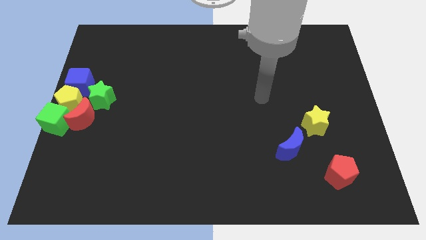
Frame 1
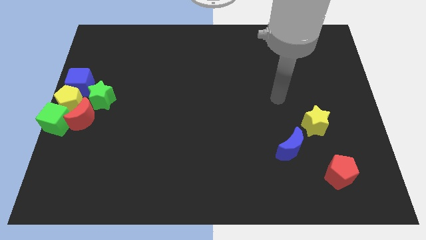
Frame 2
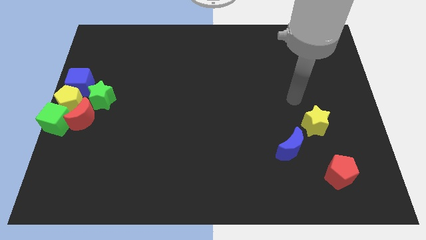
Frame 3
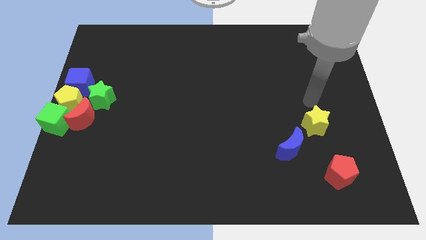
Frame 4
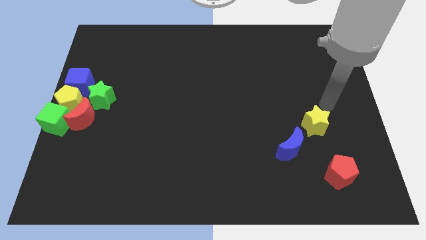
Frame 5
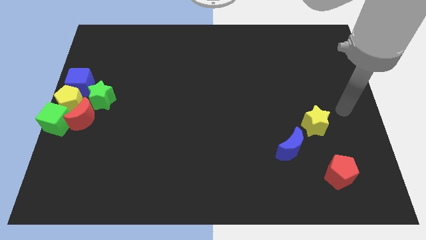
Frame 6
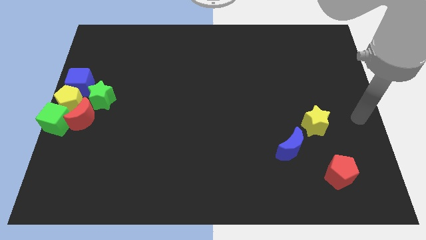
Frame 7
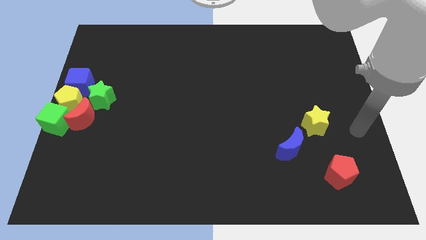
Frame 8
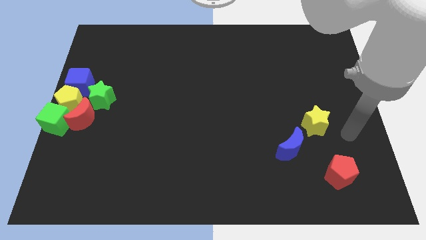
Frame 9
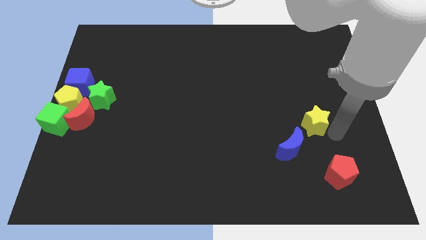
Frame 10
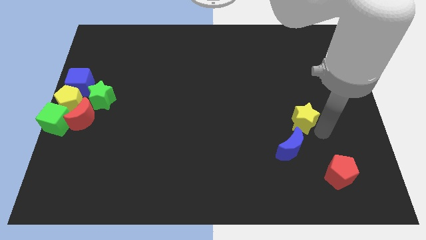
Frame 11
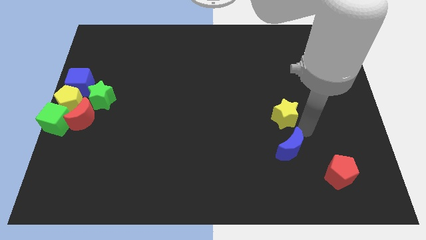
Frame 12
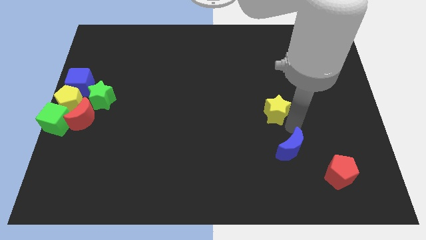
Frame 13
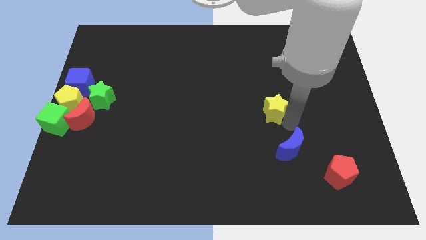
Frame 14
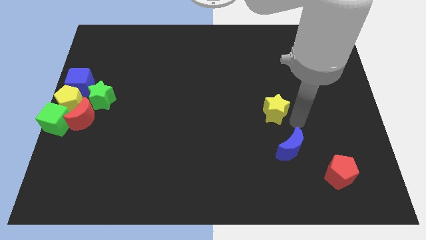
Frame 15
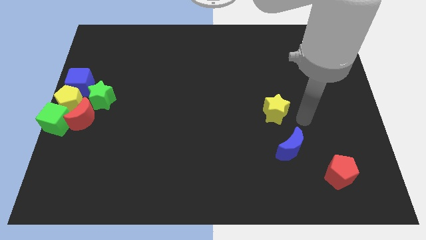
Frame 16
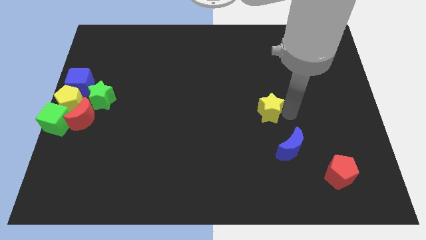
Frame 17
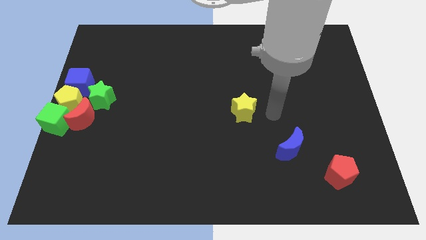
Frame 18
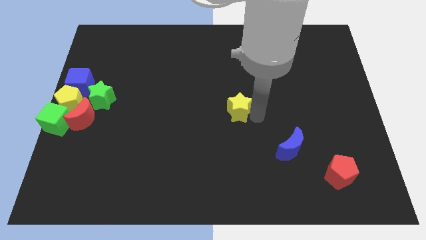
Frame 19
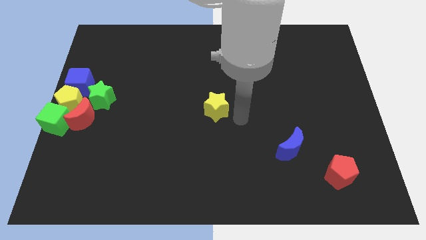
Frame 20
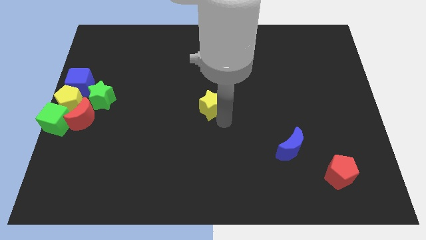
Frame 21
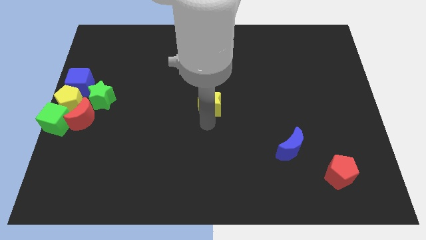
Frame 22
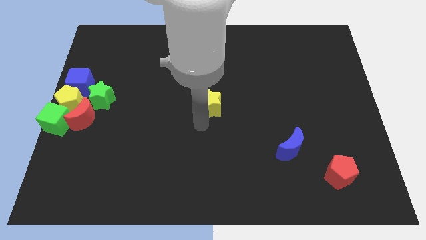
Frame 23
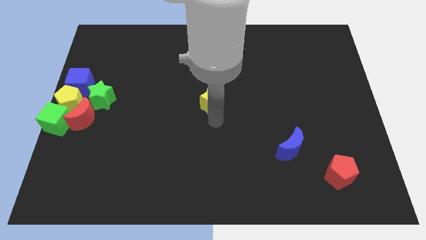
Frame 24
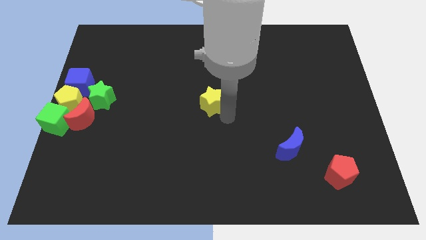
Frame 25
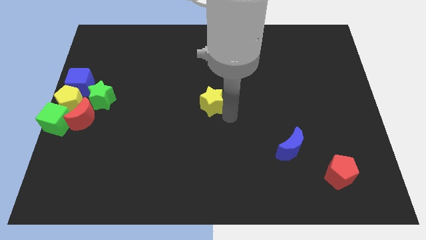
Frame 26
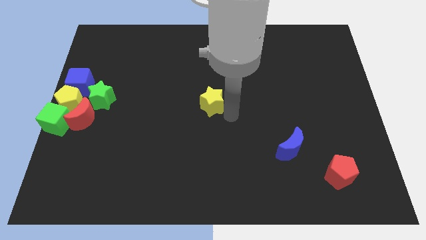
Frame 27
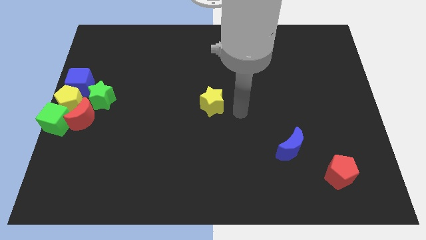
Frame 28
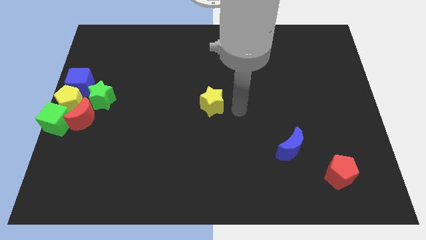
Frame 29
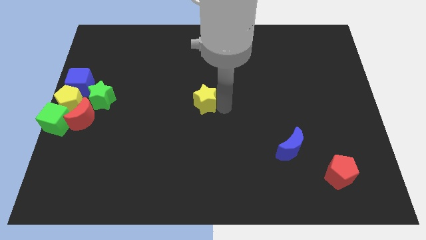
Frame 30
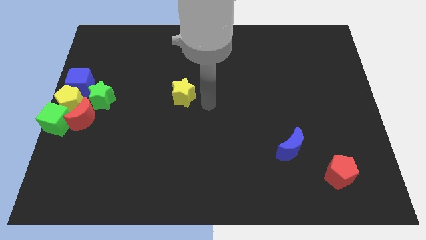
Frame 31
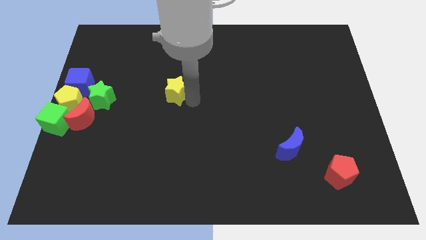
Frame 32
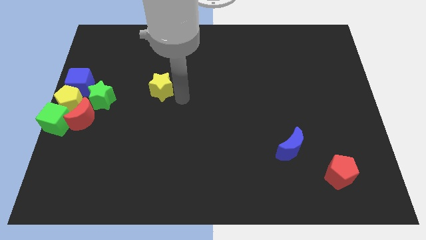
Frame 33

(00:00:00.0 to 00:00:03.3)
separate yellow star from blue crescent

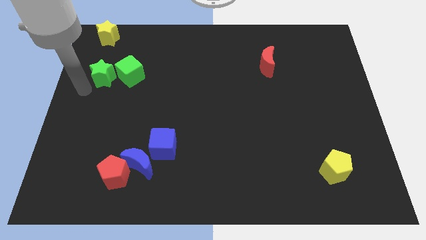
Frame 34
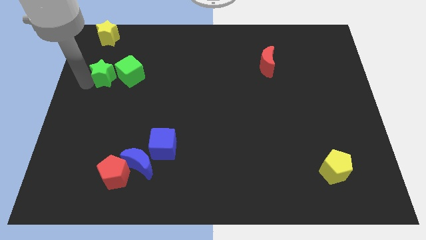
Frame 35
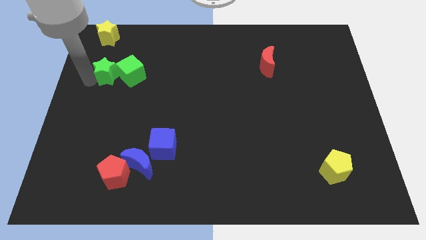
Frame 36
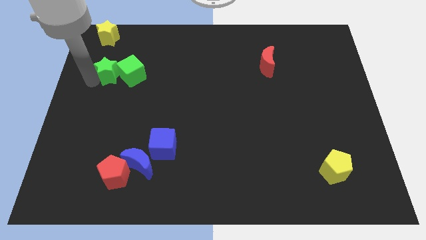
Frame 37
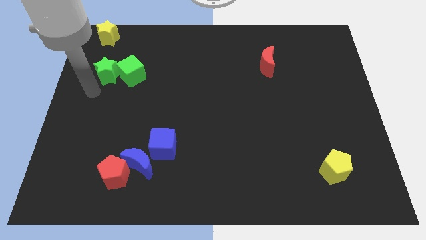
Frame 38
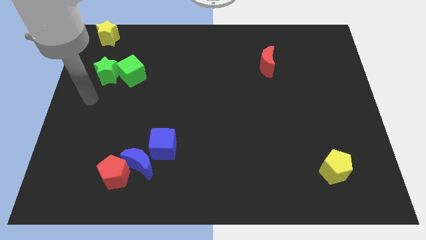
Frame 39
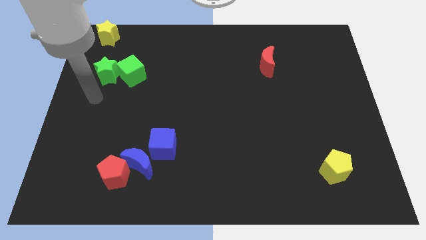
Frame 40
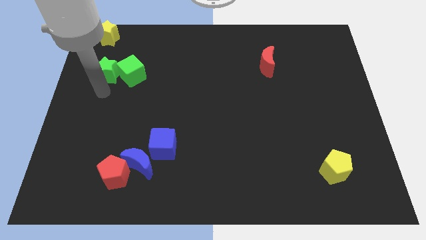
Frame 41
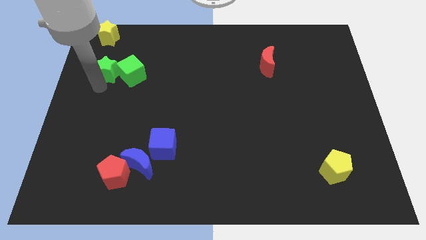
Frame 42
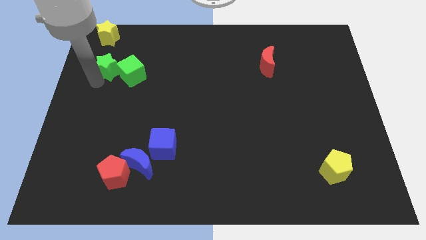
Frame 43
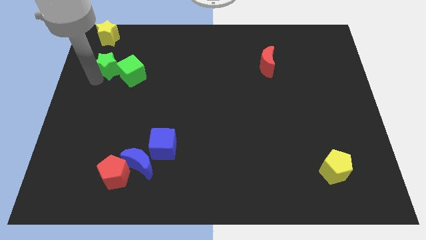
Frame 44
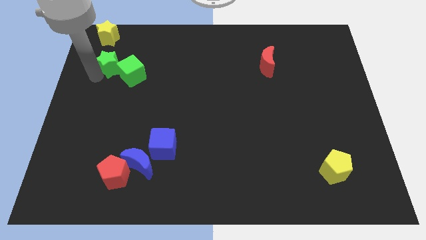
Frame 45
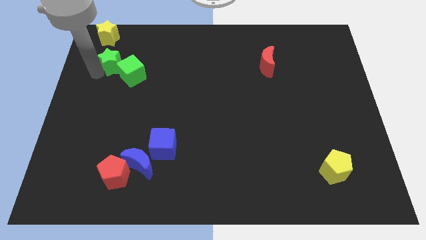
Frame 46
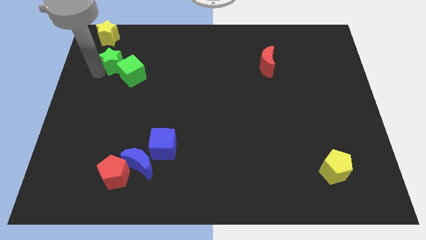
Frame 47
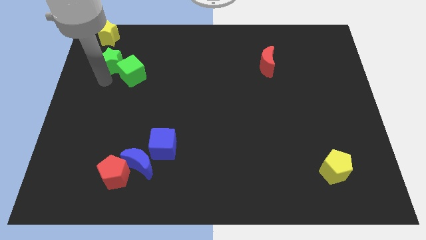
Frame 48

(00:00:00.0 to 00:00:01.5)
place the green star to the top left of the green cube

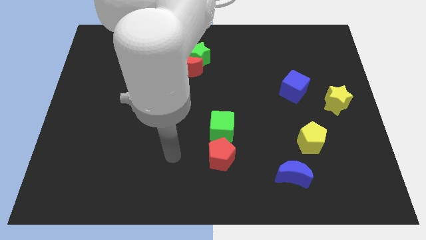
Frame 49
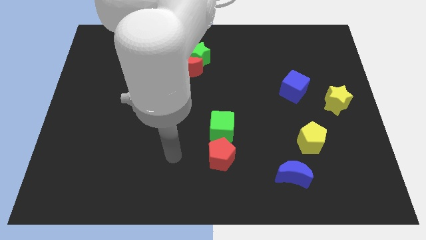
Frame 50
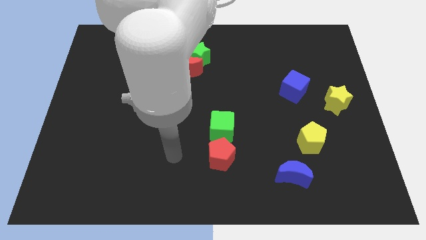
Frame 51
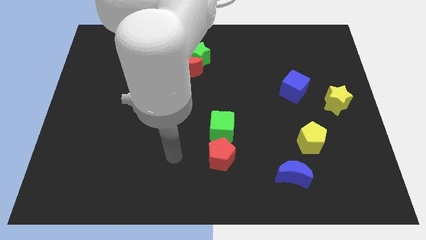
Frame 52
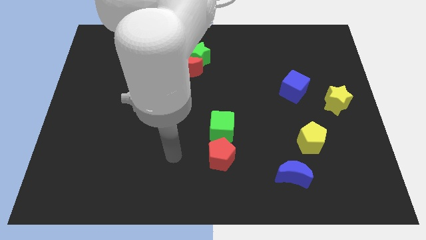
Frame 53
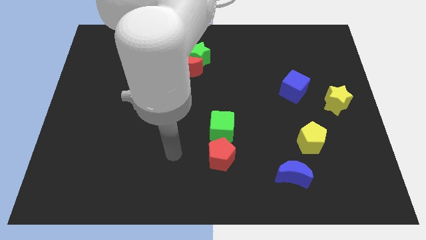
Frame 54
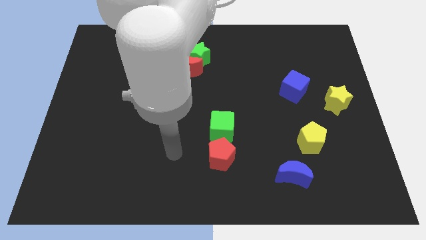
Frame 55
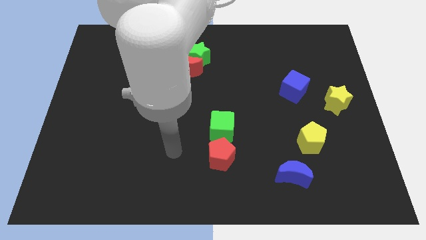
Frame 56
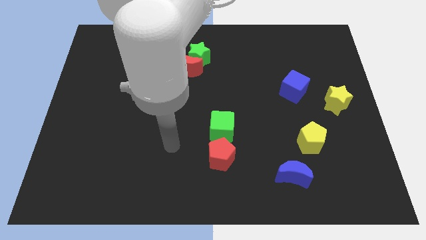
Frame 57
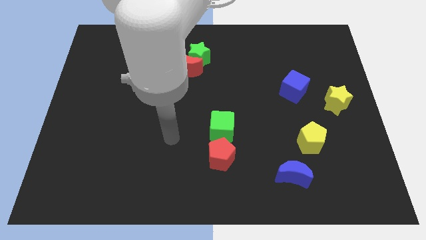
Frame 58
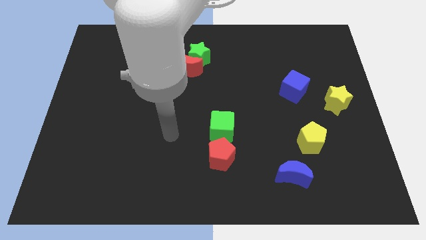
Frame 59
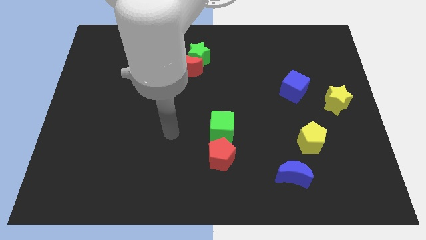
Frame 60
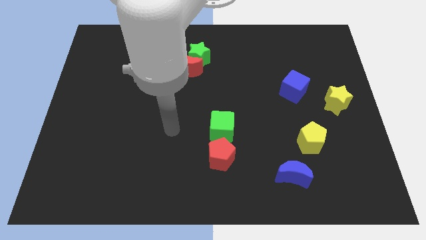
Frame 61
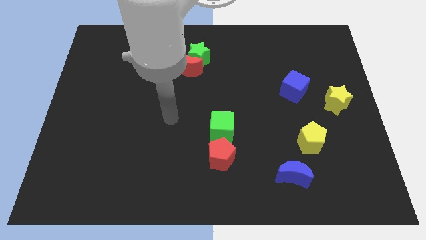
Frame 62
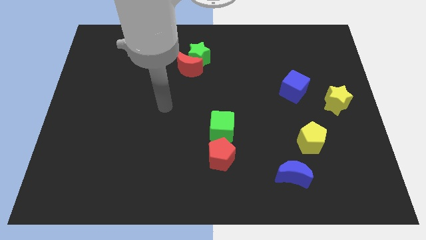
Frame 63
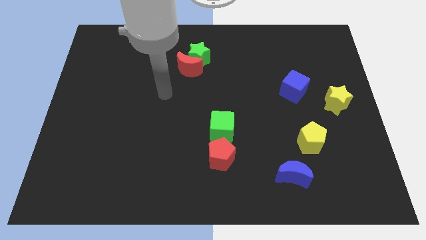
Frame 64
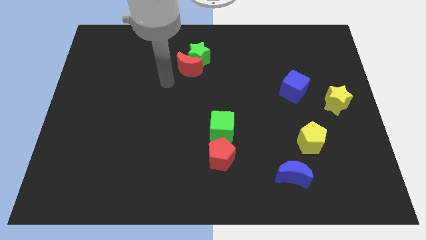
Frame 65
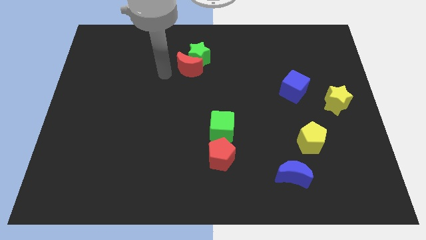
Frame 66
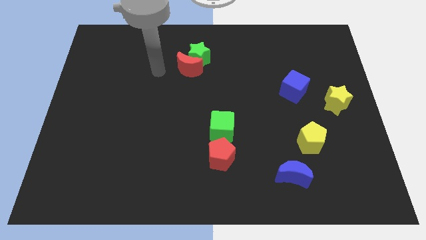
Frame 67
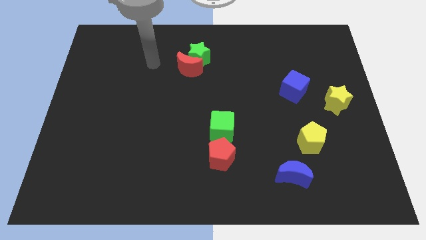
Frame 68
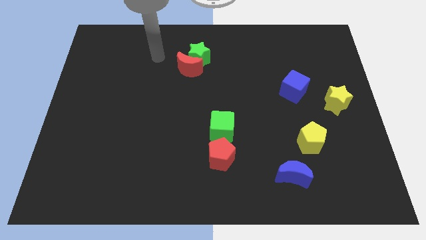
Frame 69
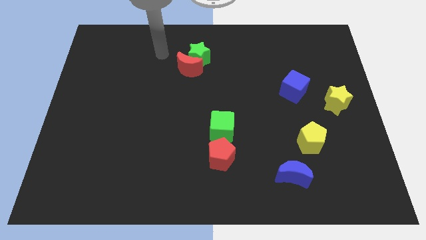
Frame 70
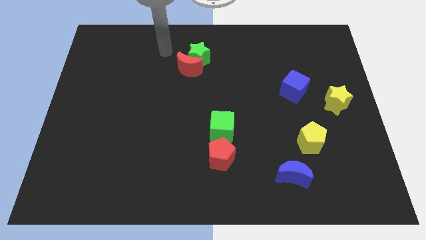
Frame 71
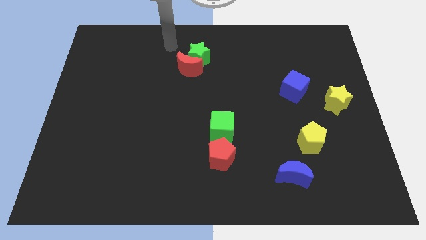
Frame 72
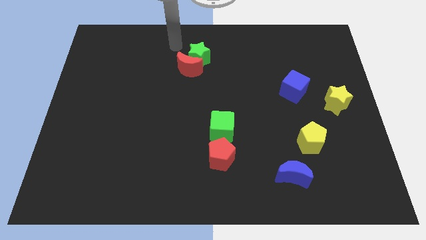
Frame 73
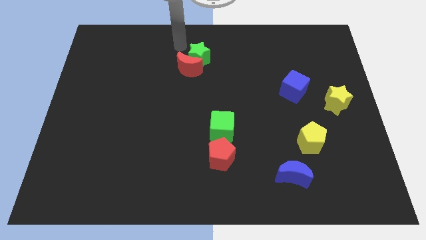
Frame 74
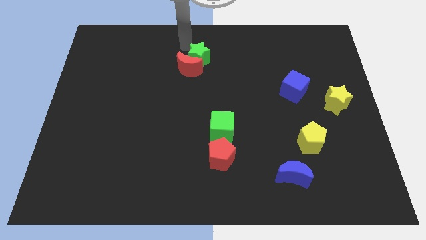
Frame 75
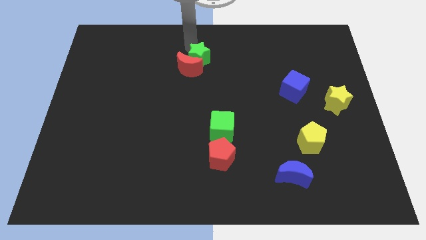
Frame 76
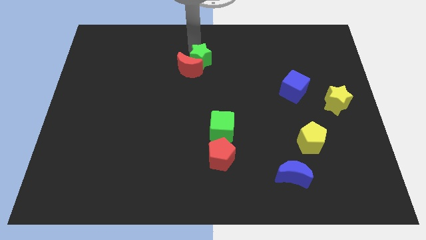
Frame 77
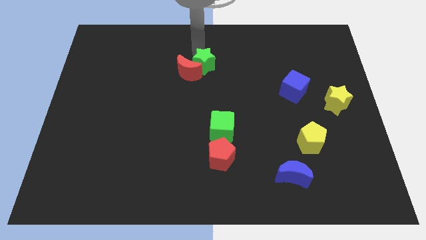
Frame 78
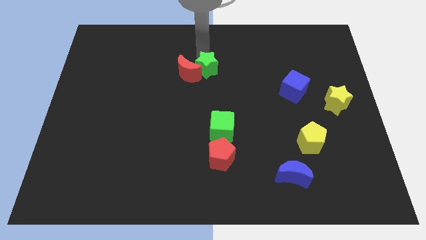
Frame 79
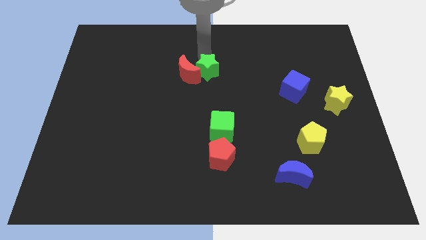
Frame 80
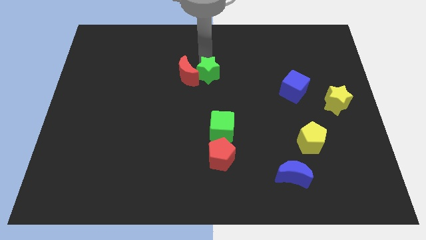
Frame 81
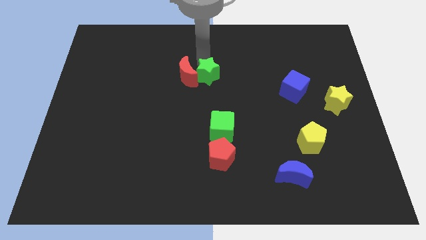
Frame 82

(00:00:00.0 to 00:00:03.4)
move the green star to the right of the red crescent

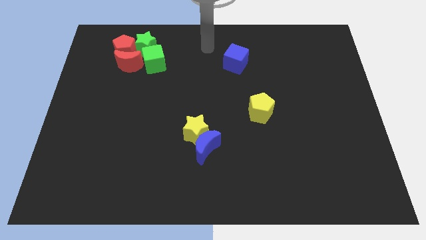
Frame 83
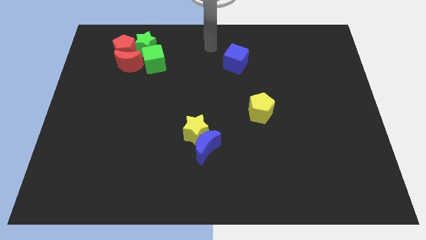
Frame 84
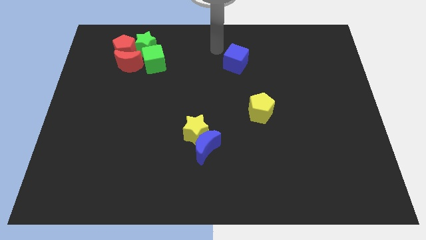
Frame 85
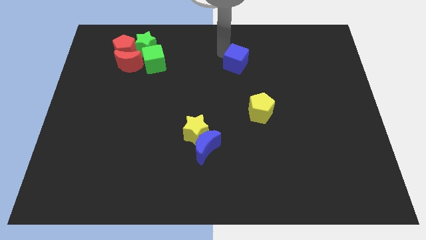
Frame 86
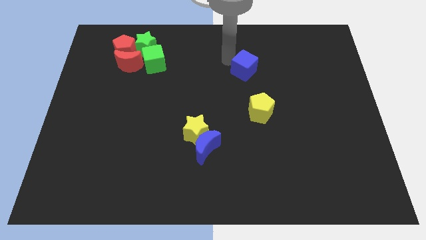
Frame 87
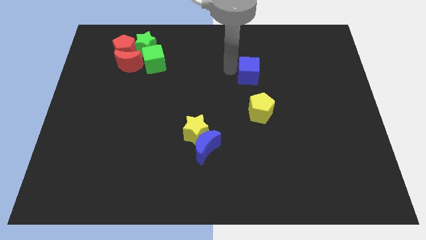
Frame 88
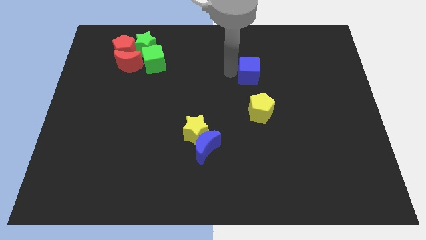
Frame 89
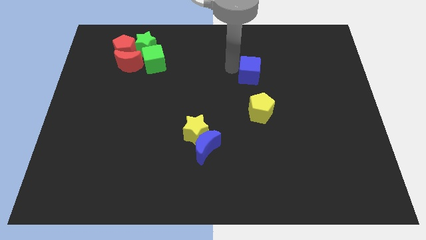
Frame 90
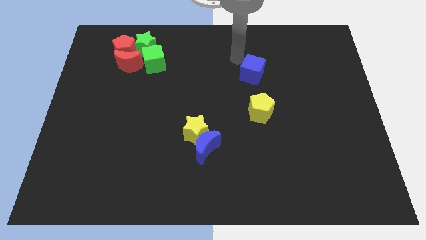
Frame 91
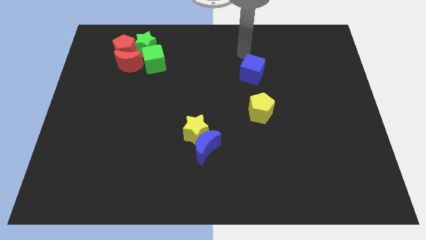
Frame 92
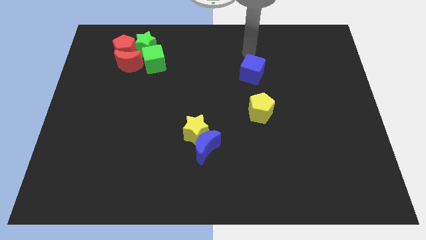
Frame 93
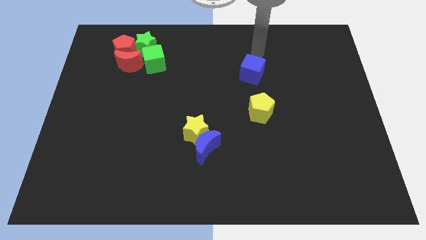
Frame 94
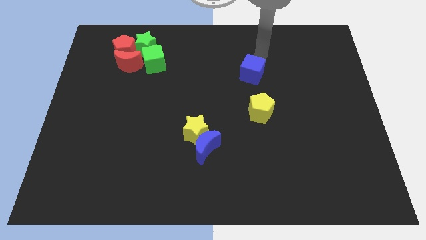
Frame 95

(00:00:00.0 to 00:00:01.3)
move the blue cube to the bottom of the board
